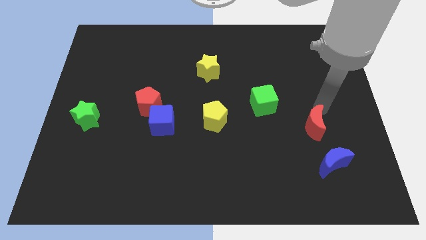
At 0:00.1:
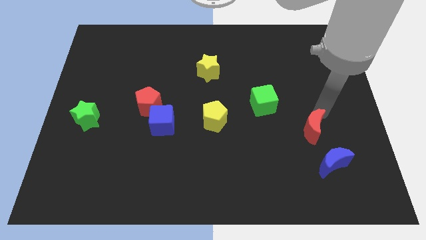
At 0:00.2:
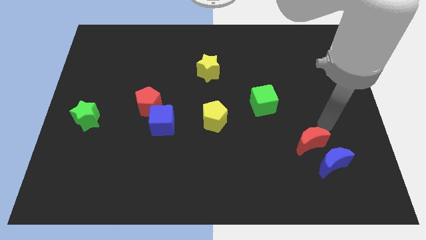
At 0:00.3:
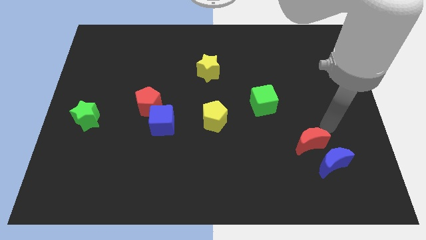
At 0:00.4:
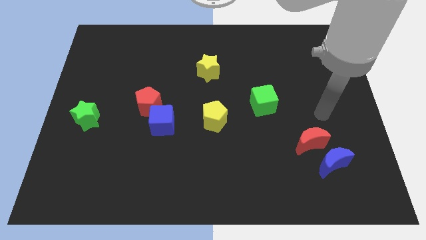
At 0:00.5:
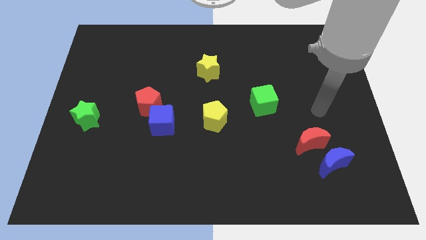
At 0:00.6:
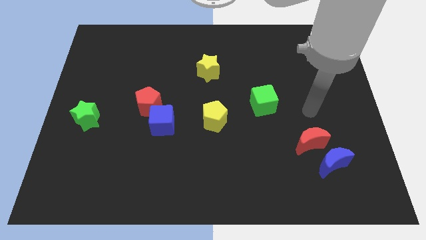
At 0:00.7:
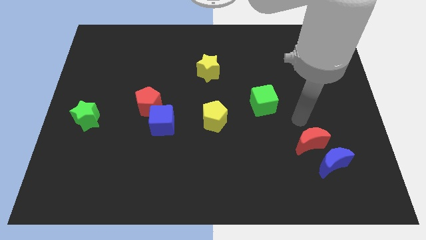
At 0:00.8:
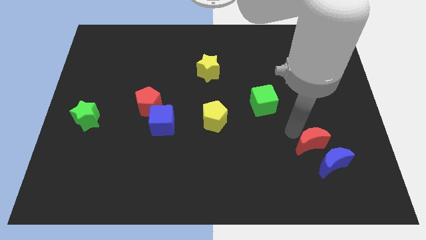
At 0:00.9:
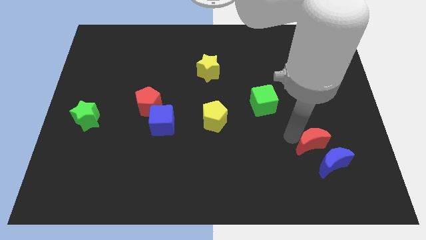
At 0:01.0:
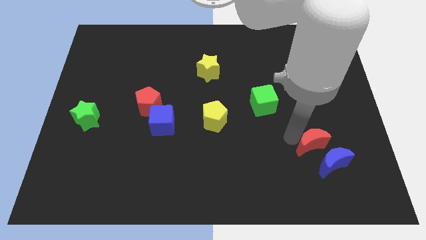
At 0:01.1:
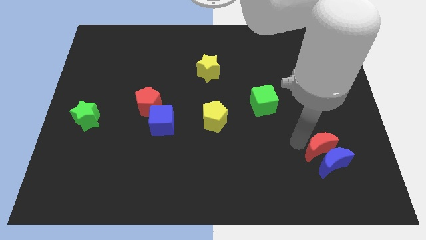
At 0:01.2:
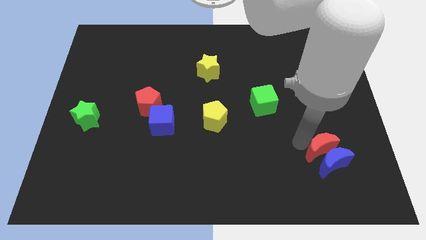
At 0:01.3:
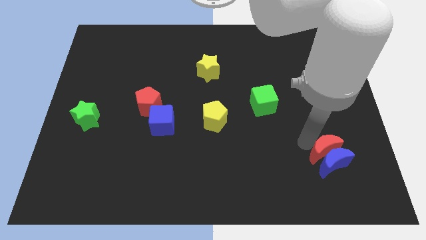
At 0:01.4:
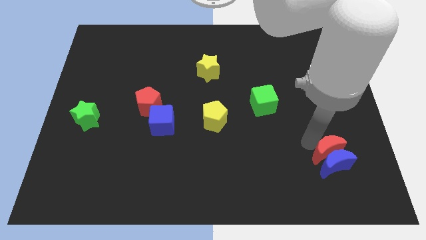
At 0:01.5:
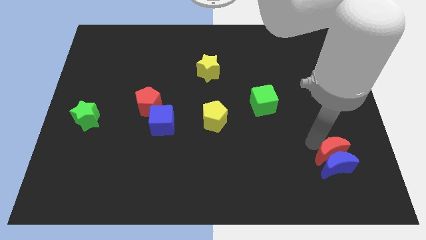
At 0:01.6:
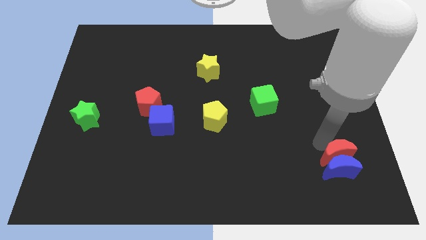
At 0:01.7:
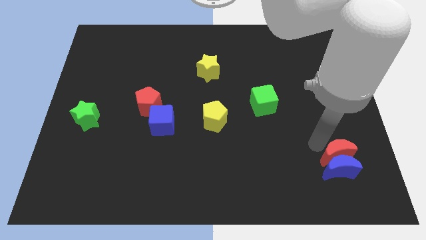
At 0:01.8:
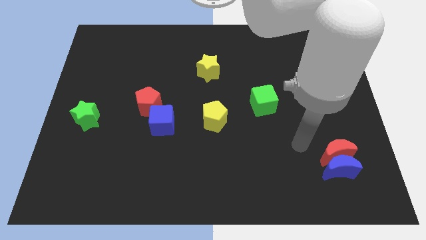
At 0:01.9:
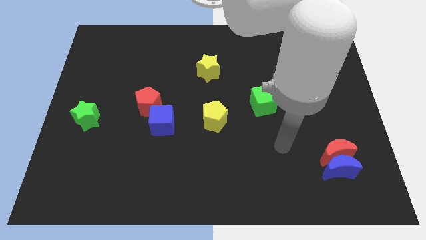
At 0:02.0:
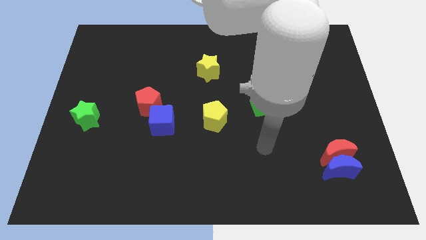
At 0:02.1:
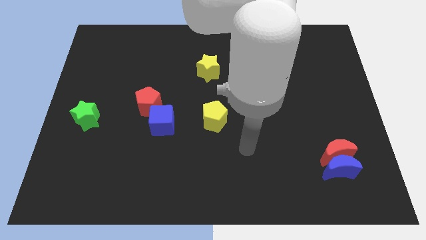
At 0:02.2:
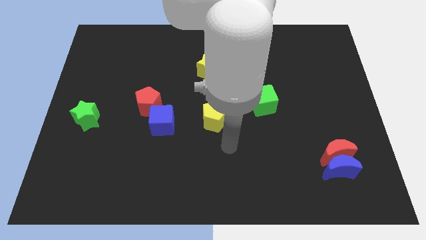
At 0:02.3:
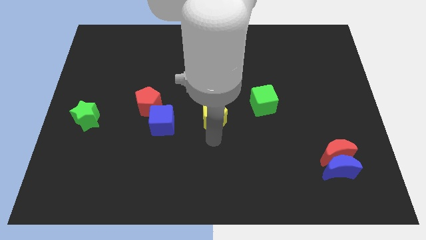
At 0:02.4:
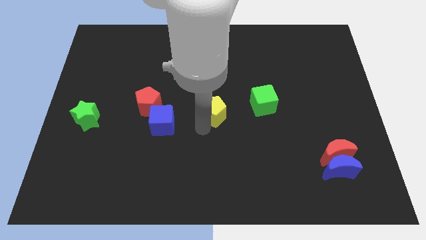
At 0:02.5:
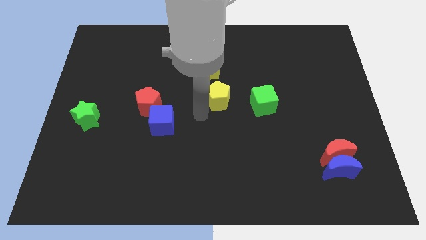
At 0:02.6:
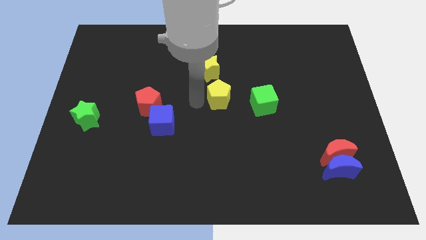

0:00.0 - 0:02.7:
move your arm away from the red moon

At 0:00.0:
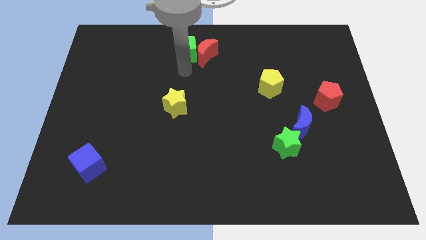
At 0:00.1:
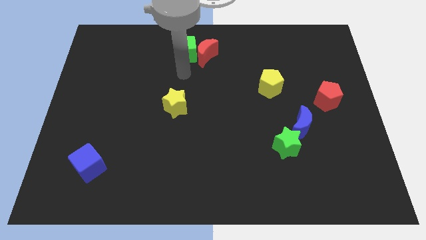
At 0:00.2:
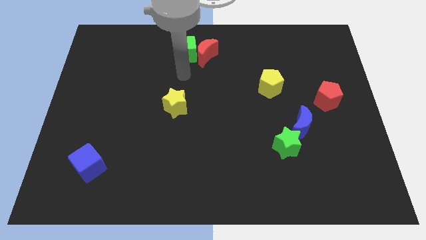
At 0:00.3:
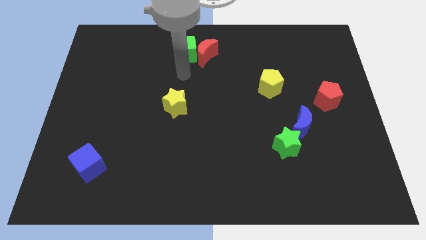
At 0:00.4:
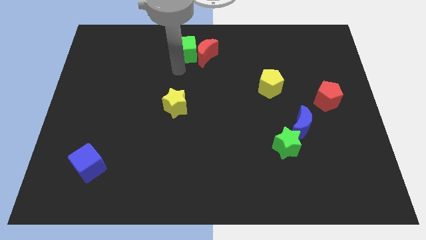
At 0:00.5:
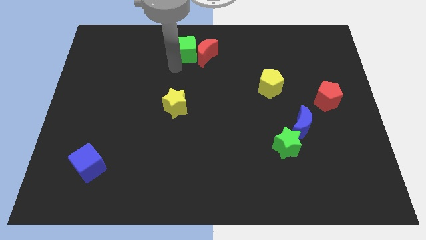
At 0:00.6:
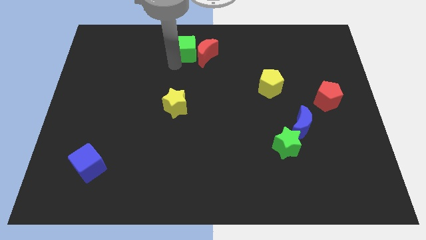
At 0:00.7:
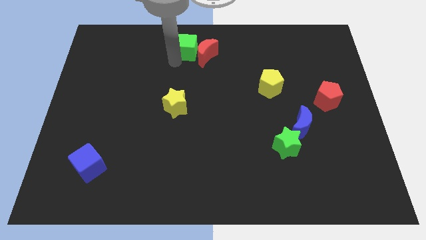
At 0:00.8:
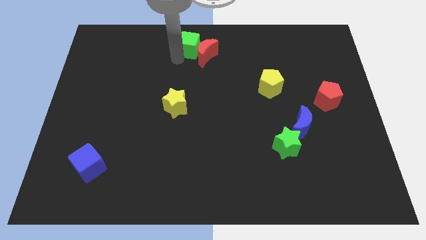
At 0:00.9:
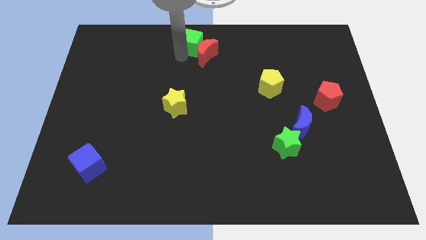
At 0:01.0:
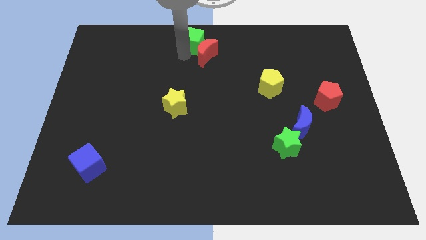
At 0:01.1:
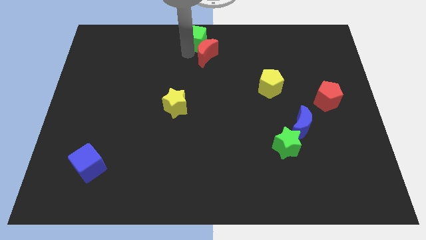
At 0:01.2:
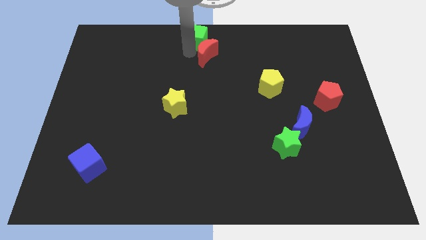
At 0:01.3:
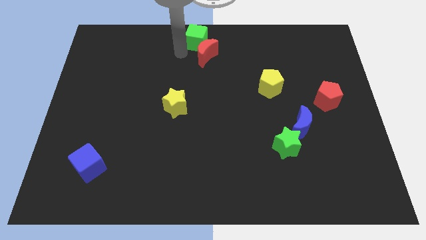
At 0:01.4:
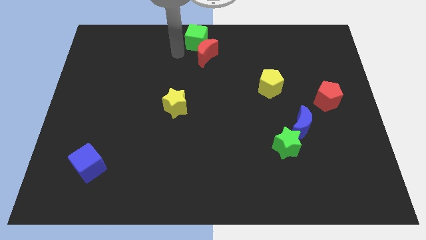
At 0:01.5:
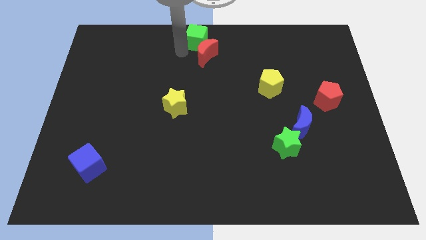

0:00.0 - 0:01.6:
place green cube to the top center of the board

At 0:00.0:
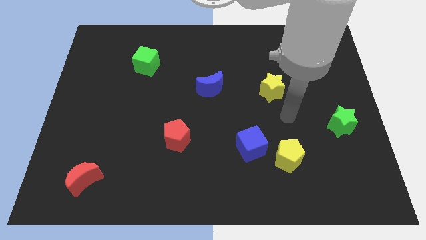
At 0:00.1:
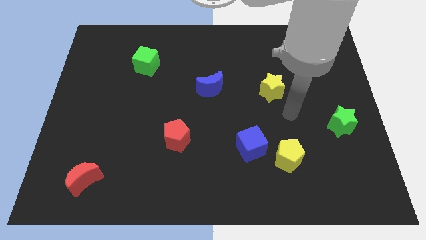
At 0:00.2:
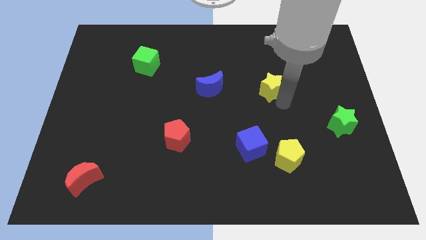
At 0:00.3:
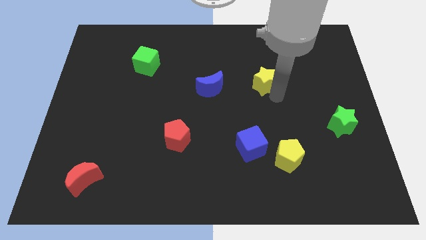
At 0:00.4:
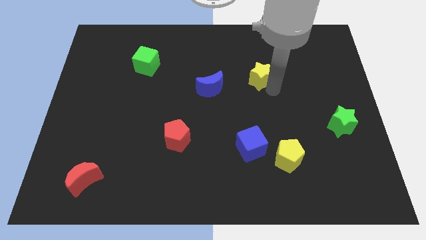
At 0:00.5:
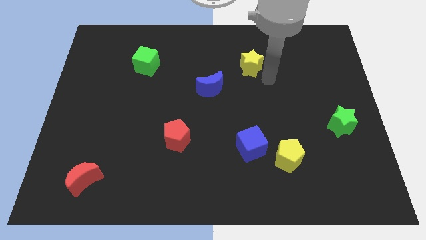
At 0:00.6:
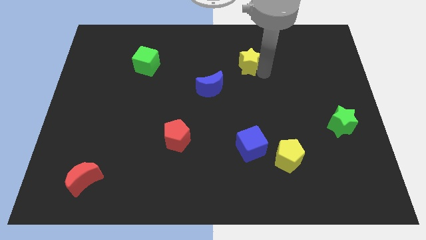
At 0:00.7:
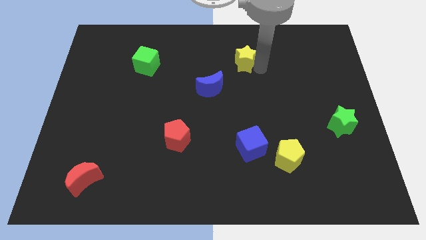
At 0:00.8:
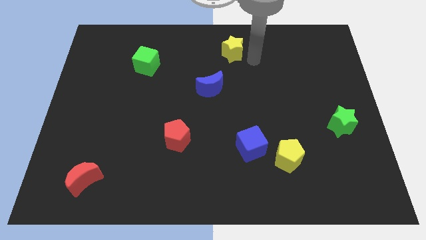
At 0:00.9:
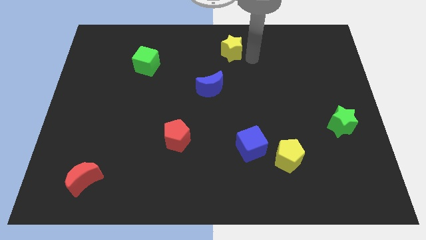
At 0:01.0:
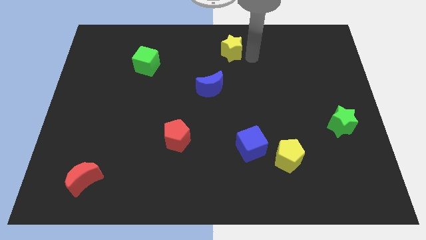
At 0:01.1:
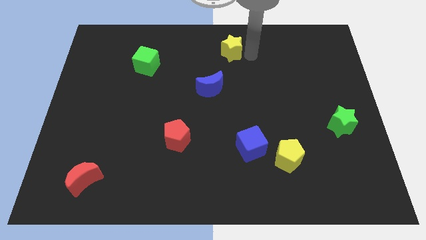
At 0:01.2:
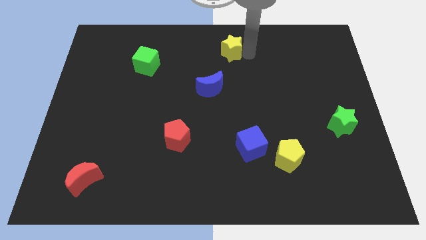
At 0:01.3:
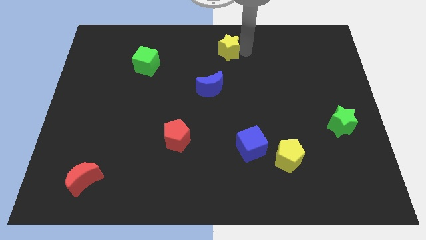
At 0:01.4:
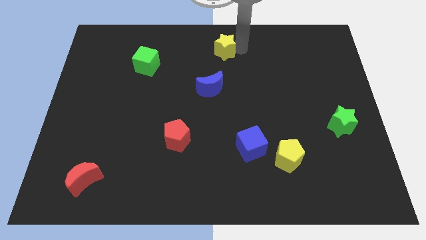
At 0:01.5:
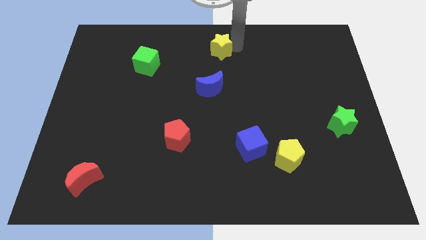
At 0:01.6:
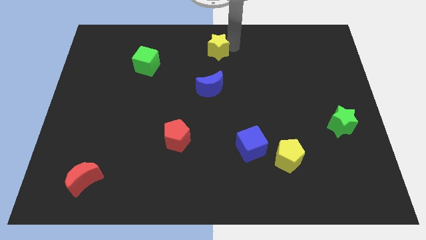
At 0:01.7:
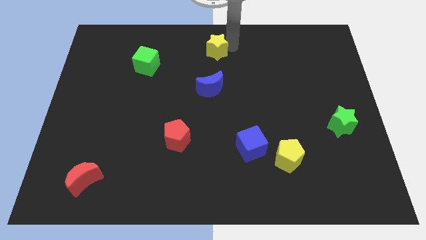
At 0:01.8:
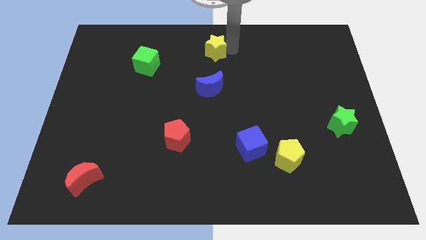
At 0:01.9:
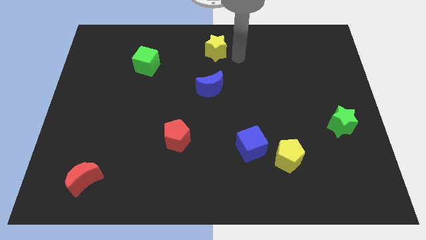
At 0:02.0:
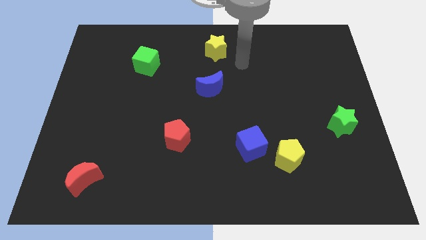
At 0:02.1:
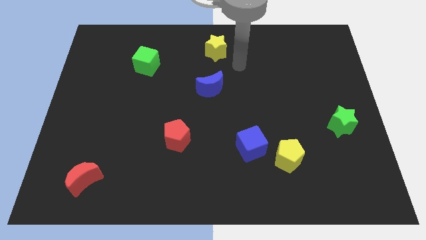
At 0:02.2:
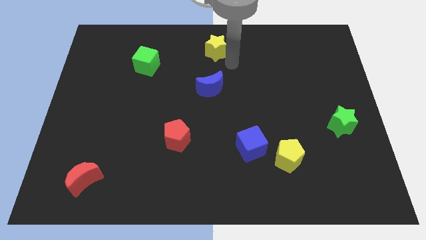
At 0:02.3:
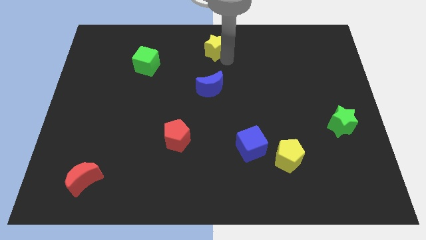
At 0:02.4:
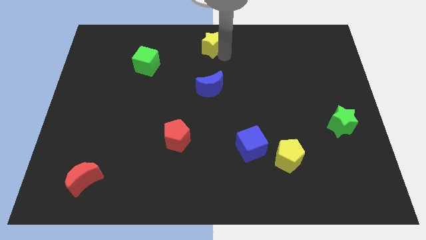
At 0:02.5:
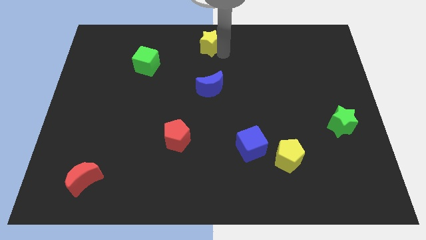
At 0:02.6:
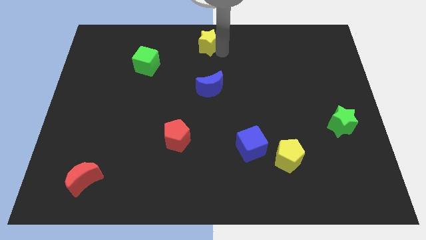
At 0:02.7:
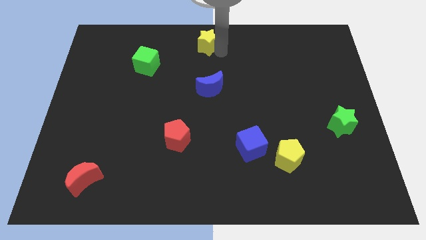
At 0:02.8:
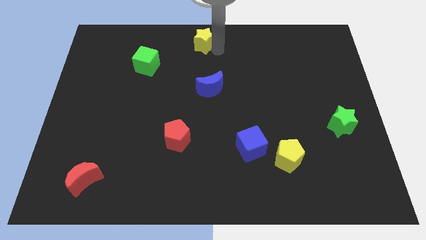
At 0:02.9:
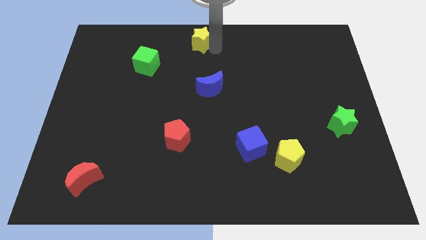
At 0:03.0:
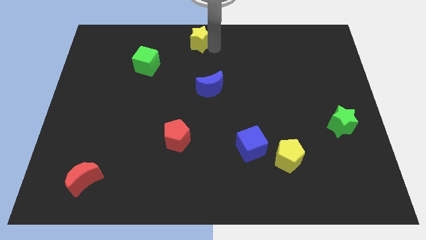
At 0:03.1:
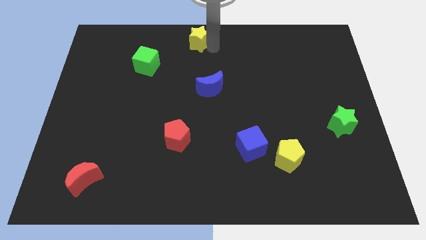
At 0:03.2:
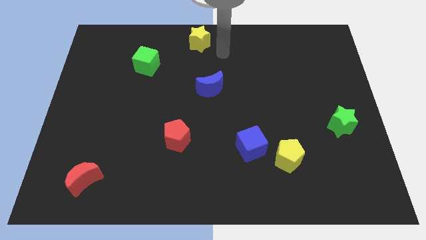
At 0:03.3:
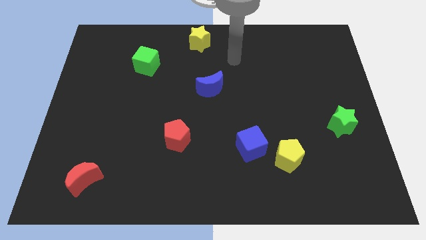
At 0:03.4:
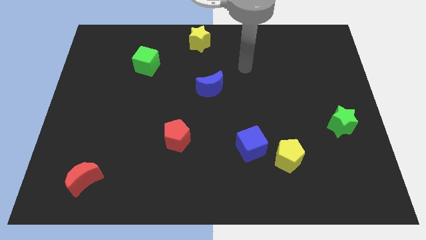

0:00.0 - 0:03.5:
put the yellow star at the top right side of green cube

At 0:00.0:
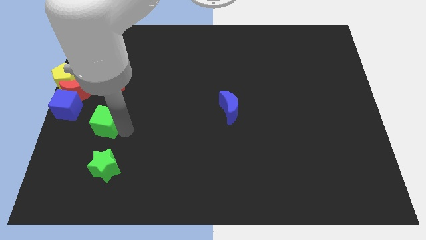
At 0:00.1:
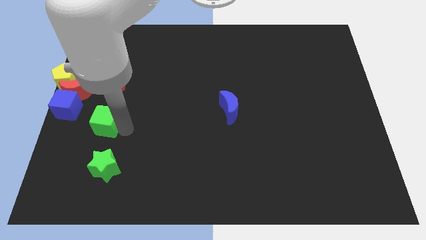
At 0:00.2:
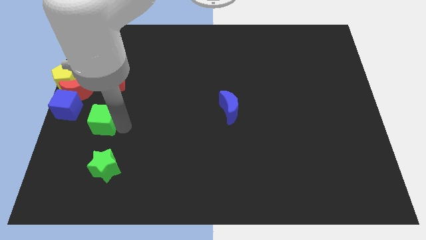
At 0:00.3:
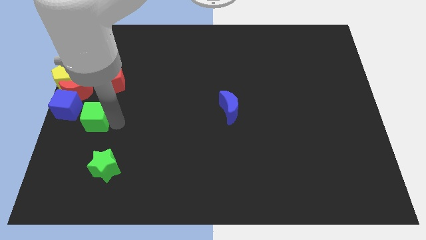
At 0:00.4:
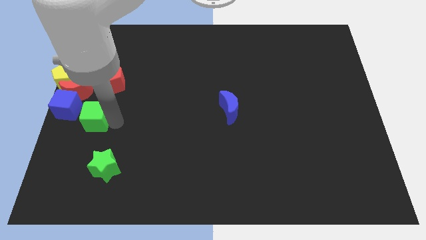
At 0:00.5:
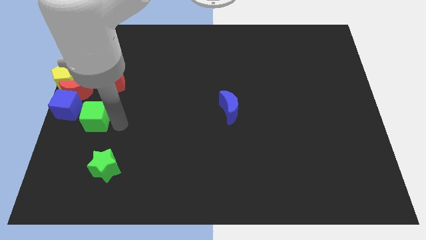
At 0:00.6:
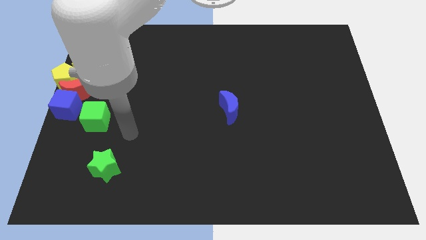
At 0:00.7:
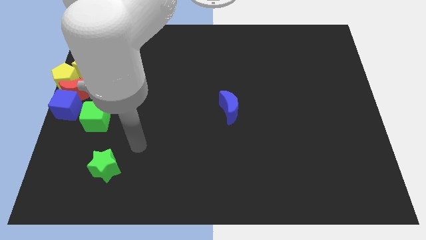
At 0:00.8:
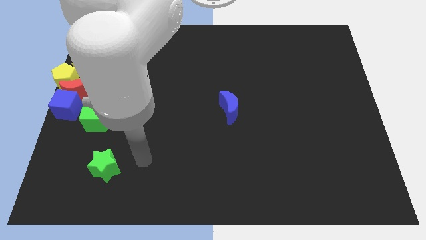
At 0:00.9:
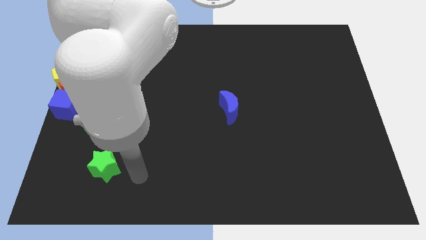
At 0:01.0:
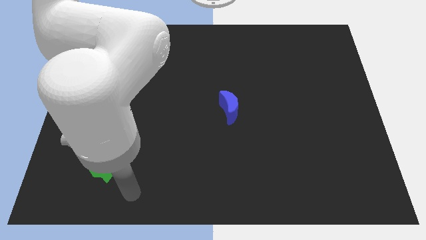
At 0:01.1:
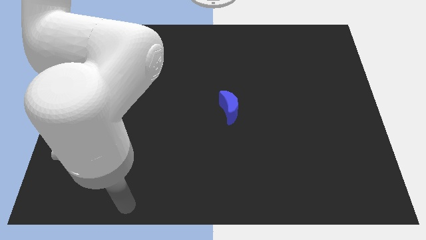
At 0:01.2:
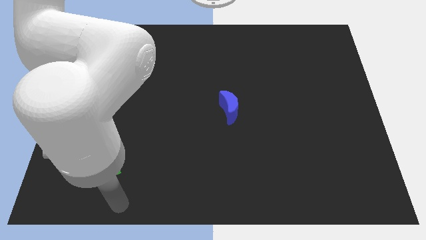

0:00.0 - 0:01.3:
move the green cube to the right of the blue cube
